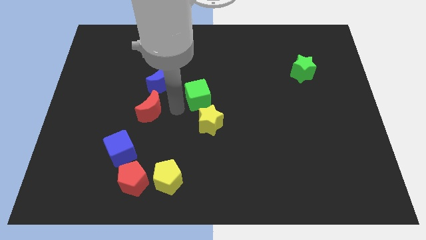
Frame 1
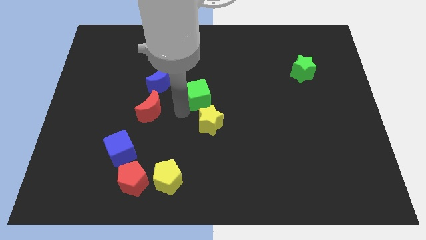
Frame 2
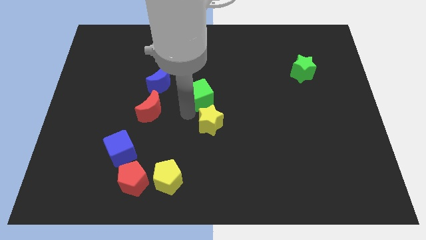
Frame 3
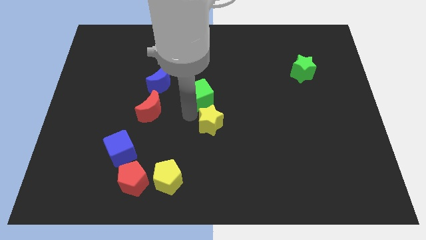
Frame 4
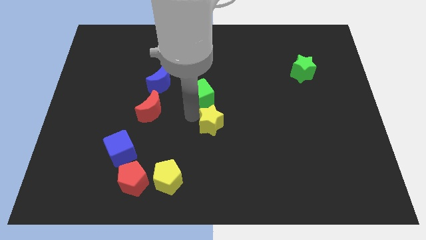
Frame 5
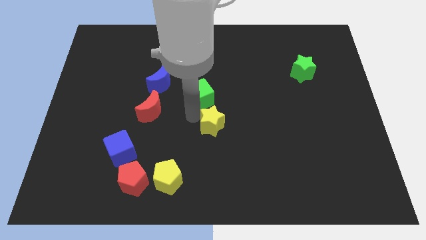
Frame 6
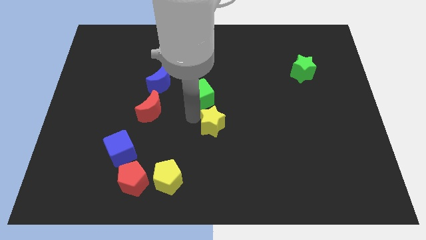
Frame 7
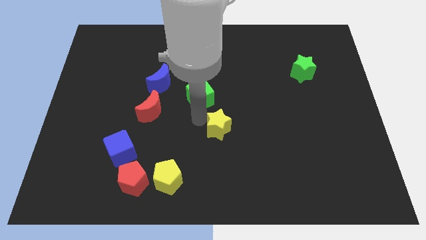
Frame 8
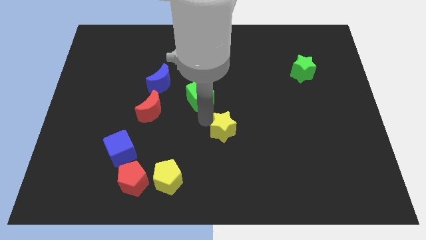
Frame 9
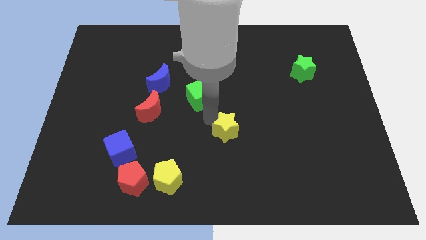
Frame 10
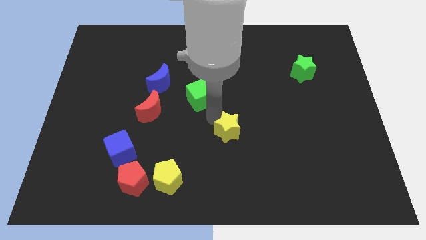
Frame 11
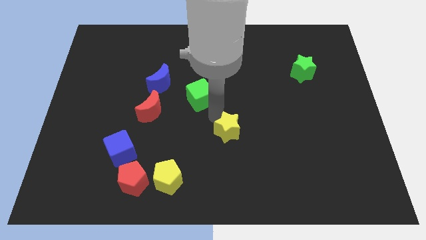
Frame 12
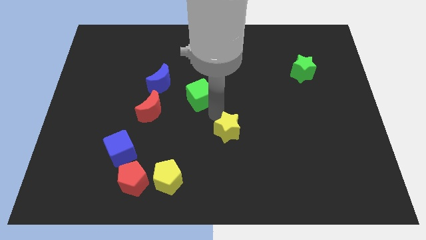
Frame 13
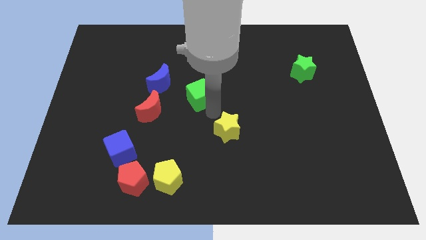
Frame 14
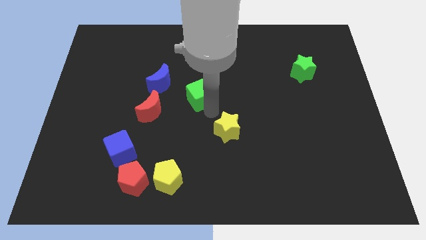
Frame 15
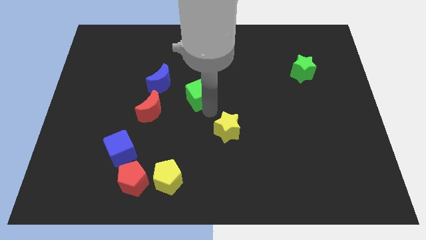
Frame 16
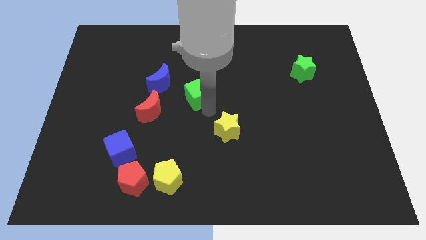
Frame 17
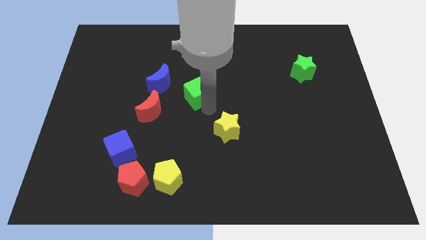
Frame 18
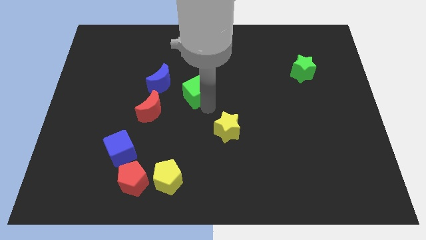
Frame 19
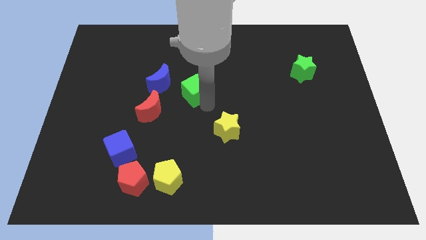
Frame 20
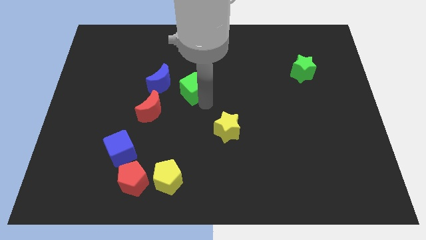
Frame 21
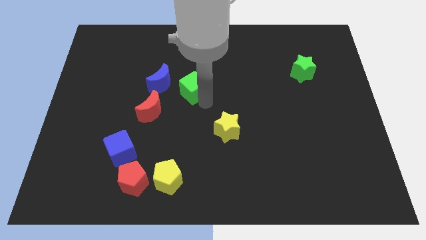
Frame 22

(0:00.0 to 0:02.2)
push yellow star apart from green cube

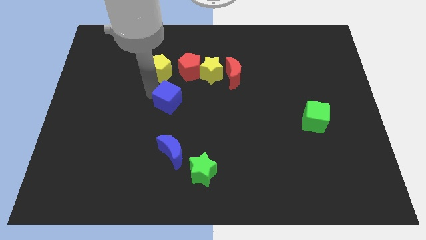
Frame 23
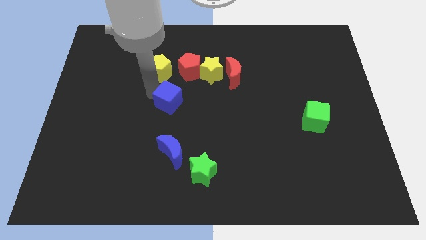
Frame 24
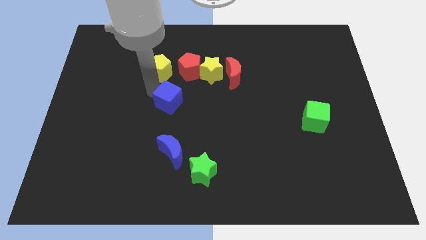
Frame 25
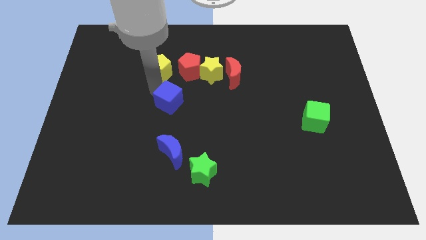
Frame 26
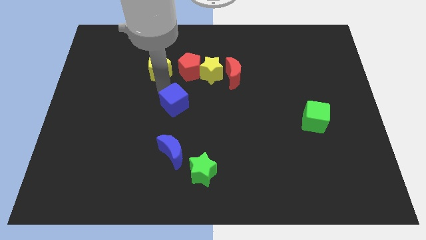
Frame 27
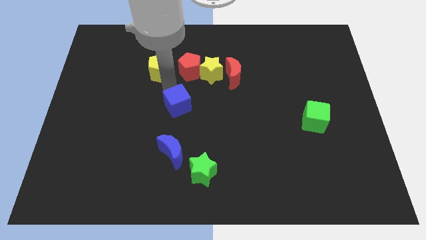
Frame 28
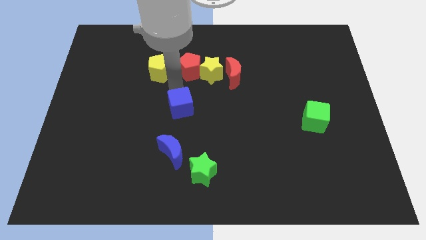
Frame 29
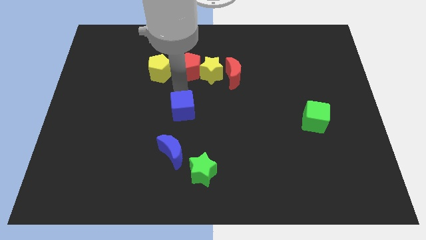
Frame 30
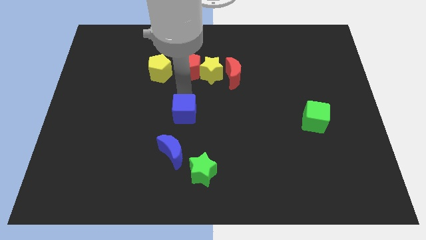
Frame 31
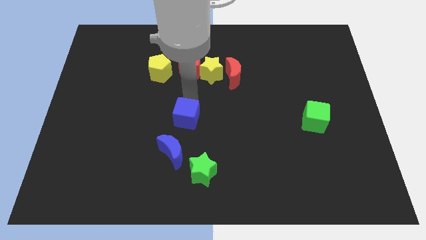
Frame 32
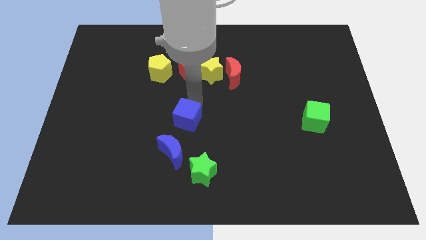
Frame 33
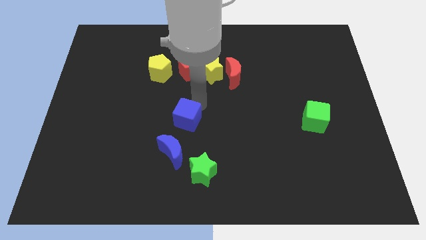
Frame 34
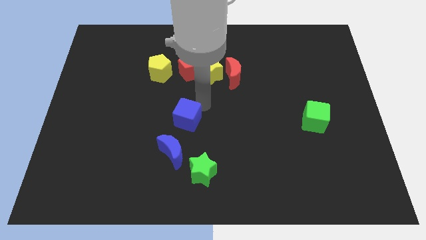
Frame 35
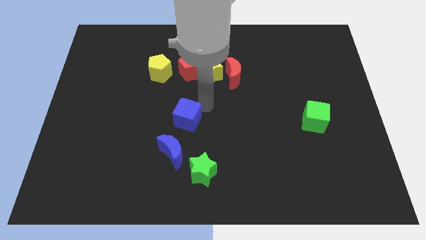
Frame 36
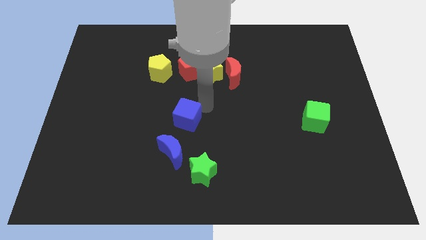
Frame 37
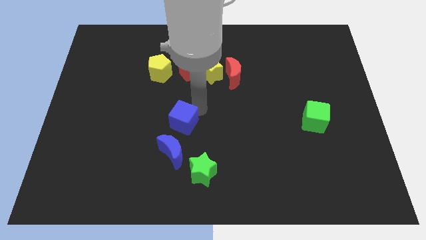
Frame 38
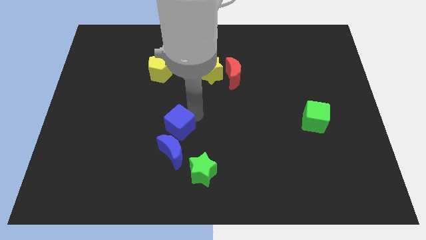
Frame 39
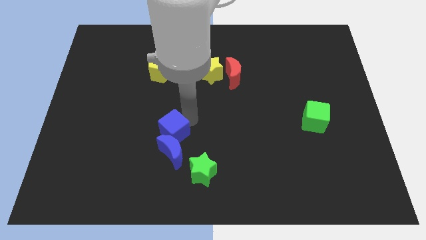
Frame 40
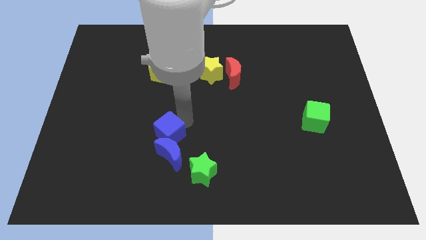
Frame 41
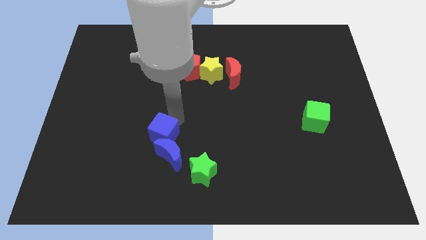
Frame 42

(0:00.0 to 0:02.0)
place the blue cube into the blue crescent

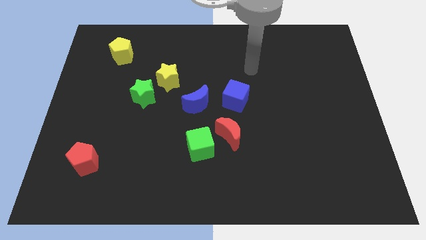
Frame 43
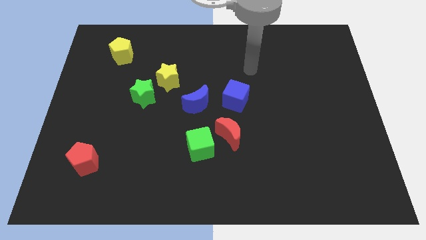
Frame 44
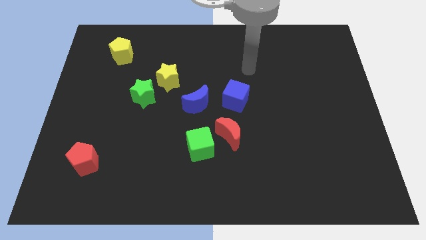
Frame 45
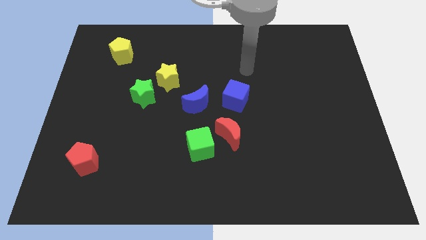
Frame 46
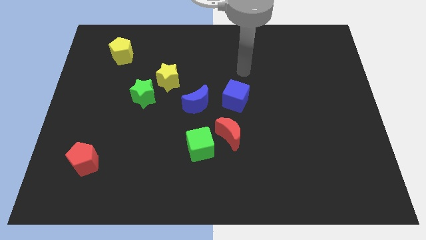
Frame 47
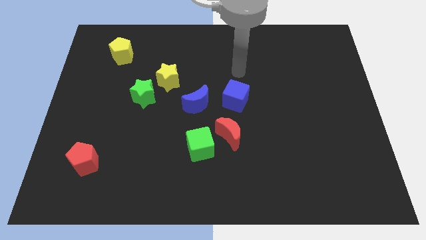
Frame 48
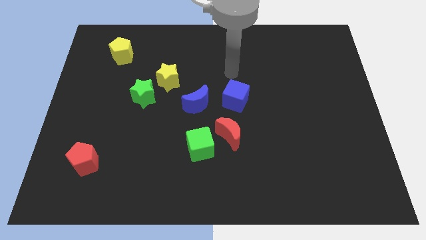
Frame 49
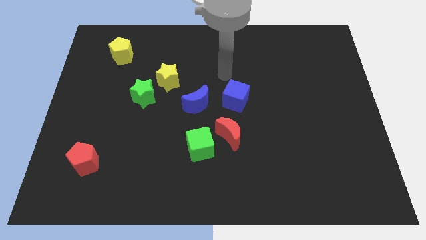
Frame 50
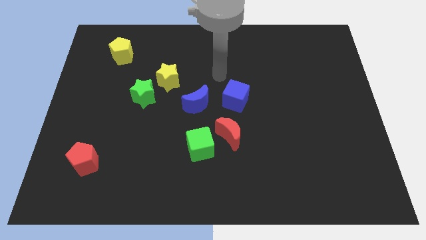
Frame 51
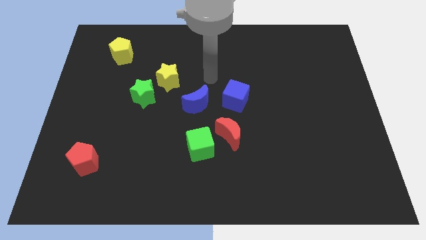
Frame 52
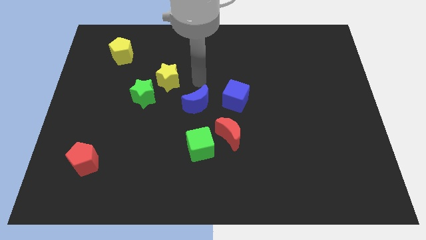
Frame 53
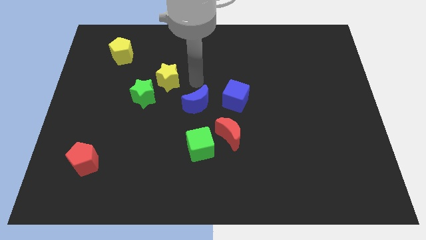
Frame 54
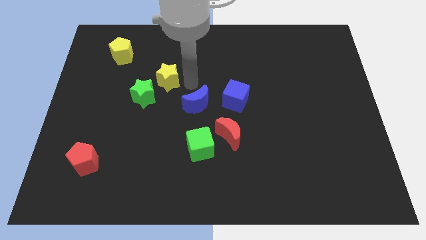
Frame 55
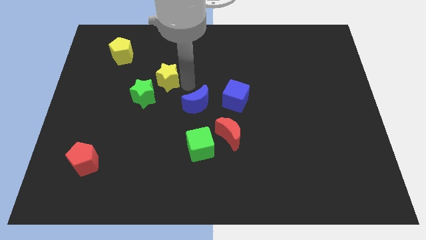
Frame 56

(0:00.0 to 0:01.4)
move your arm towards the yellow star

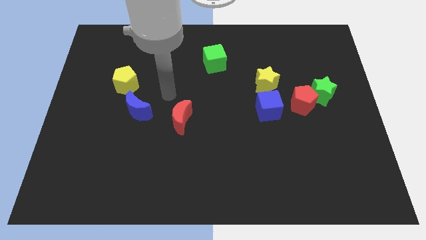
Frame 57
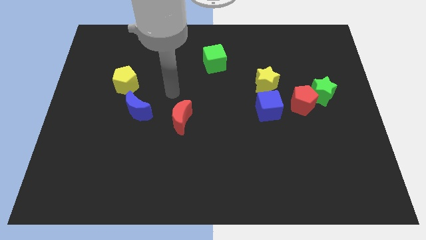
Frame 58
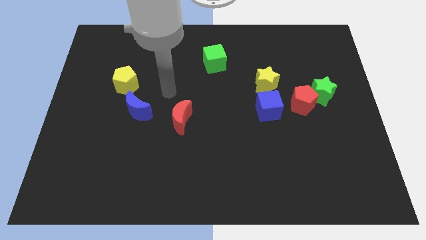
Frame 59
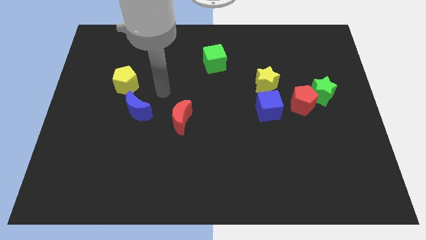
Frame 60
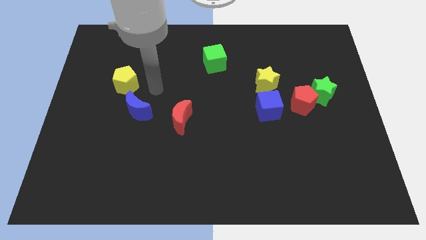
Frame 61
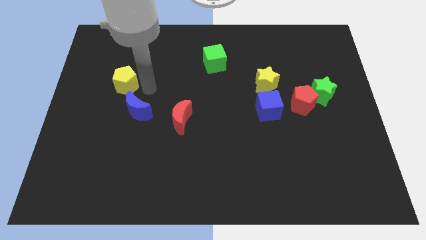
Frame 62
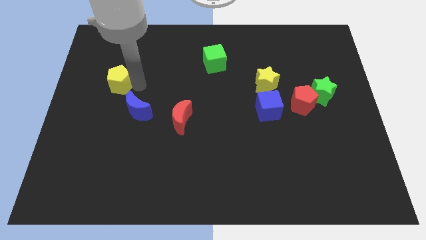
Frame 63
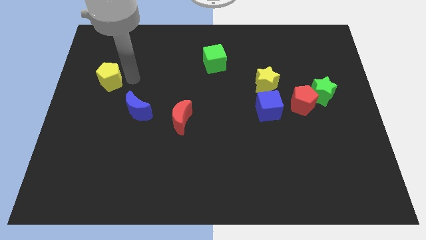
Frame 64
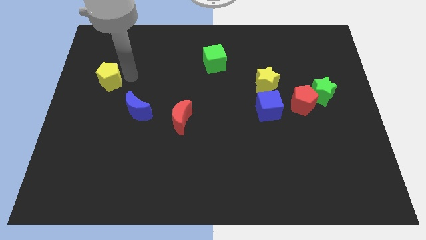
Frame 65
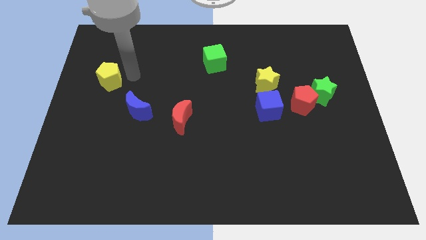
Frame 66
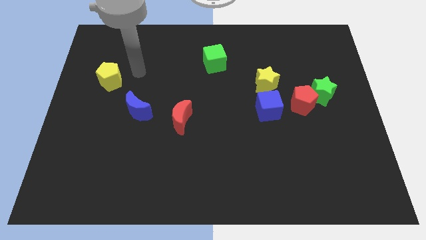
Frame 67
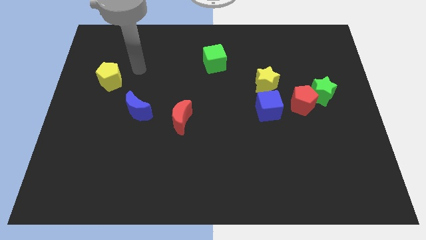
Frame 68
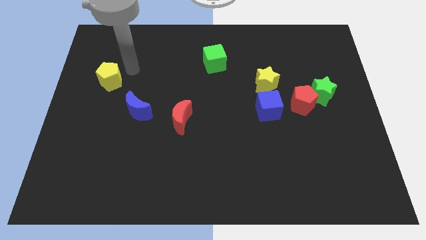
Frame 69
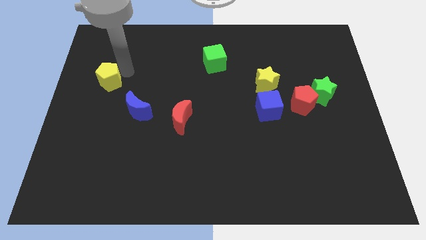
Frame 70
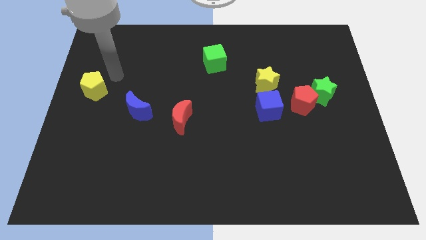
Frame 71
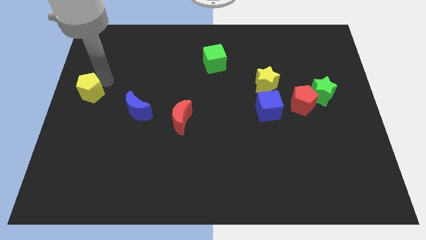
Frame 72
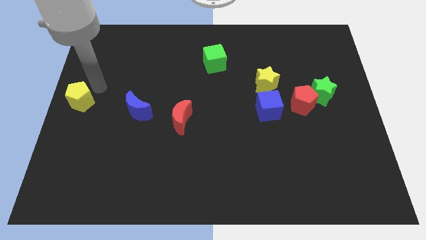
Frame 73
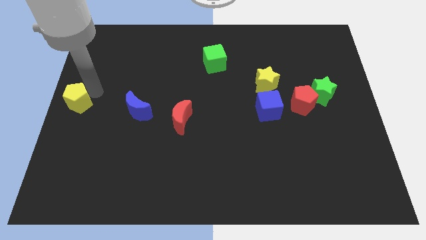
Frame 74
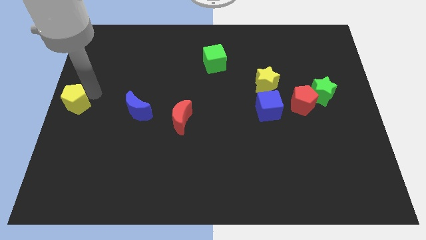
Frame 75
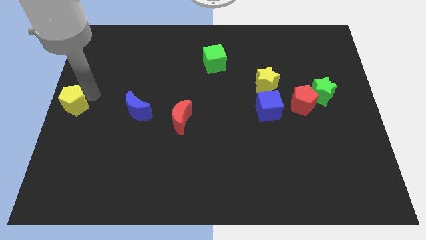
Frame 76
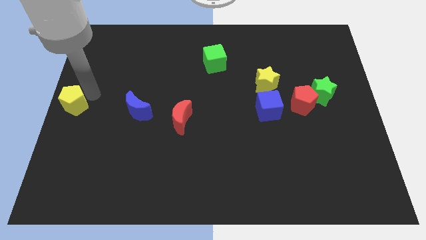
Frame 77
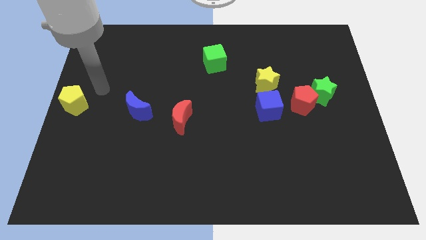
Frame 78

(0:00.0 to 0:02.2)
push the yellow pentagon to the left center of the board

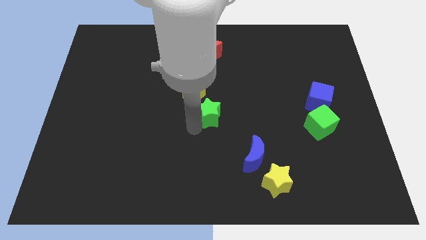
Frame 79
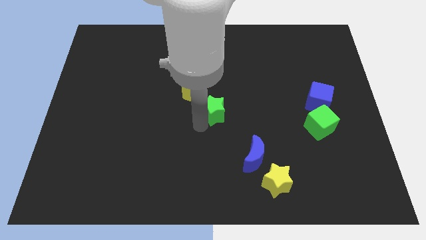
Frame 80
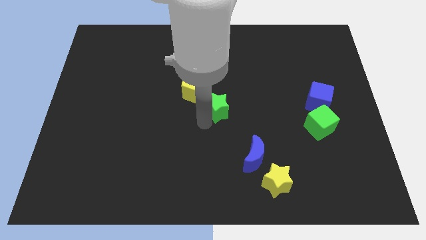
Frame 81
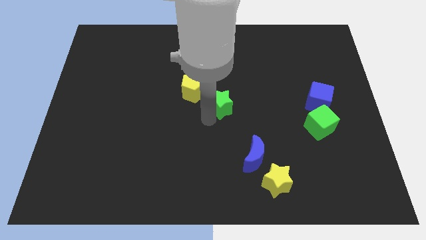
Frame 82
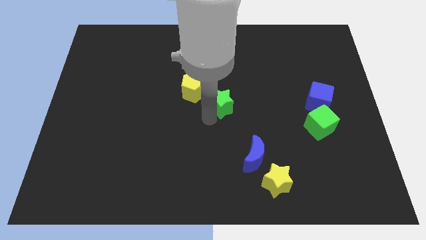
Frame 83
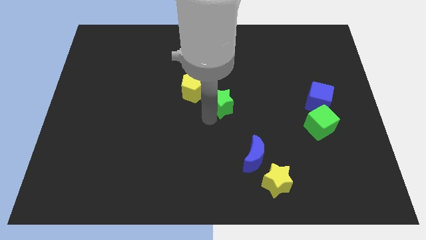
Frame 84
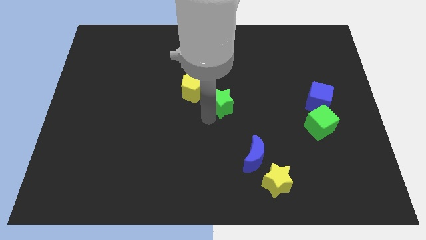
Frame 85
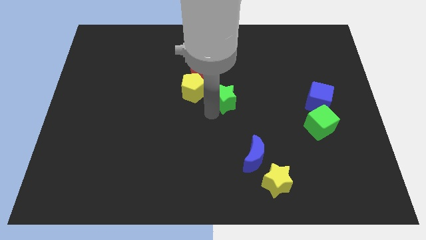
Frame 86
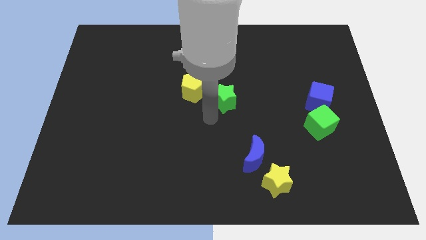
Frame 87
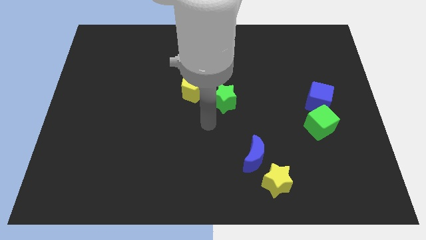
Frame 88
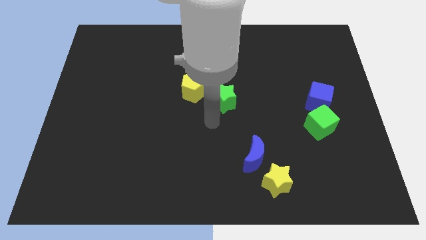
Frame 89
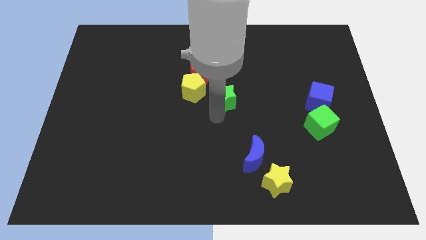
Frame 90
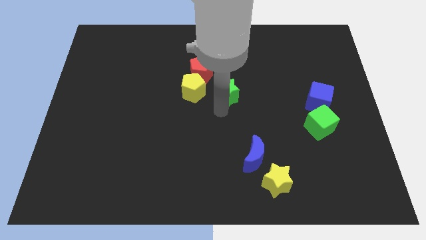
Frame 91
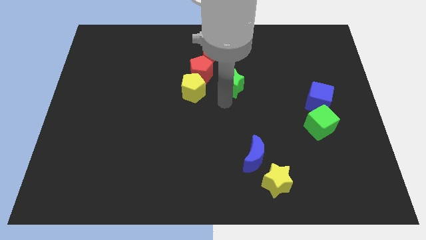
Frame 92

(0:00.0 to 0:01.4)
push the green star to the right of the yellow pentagon
